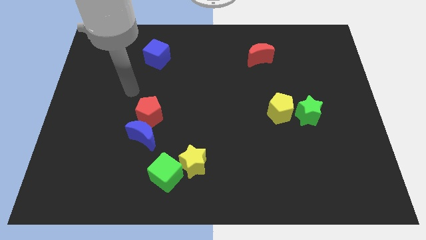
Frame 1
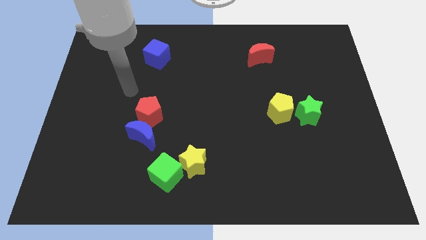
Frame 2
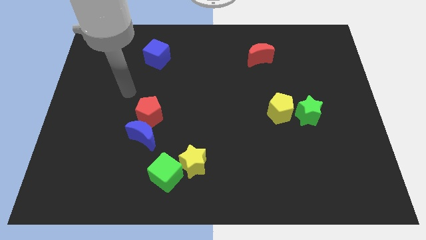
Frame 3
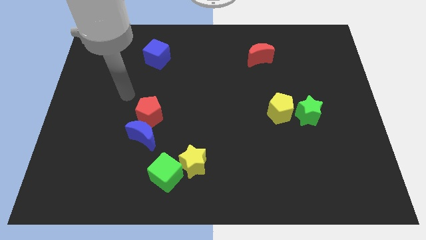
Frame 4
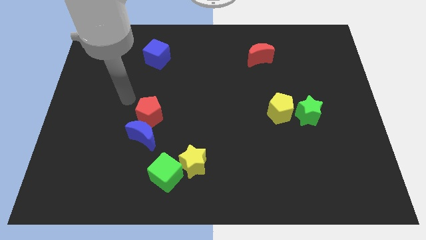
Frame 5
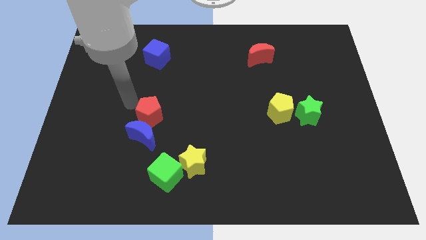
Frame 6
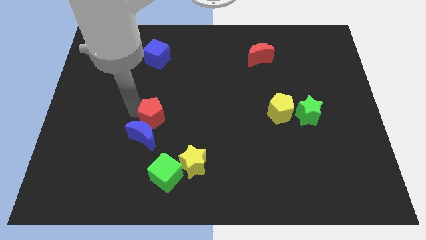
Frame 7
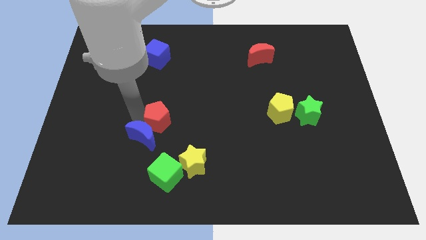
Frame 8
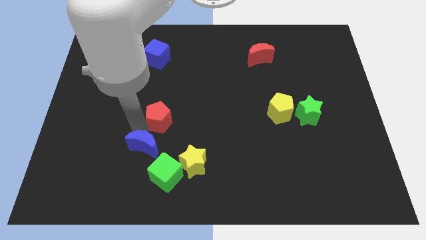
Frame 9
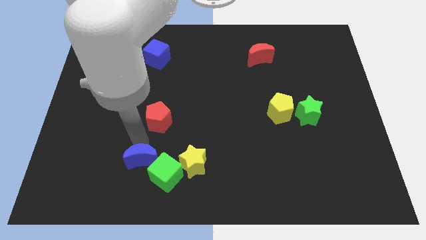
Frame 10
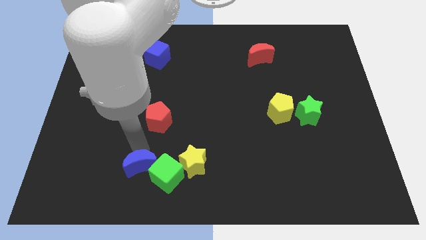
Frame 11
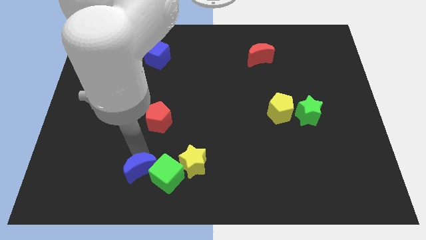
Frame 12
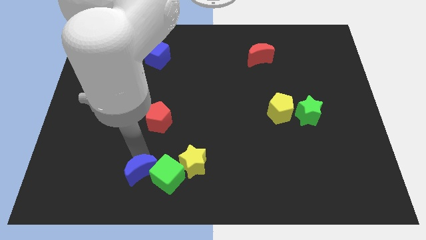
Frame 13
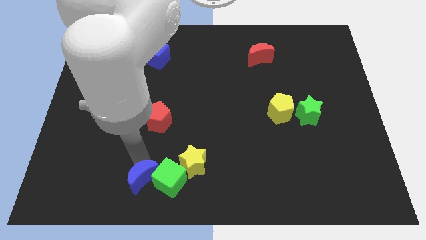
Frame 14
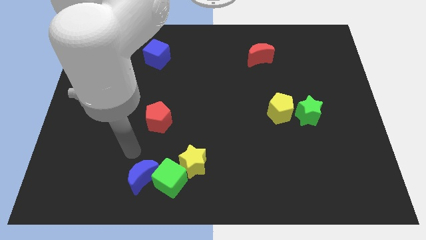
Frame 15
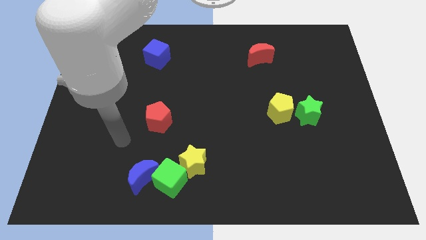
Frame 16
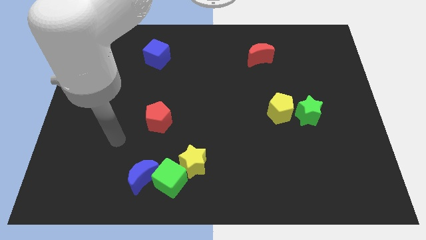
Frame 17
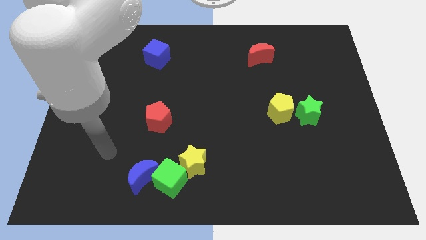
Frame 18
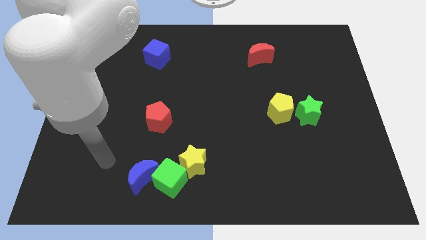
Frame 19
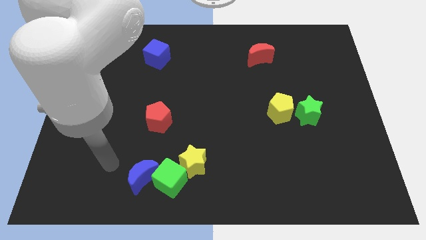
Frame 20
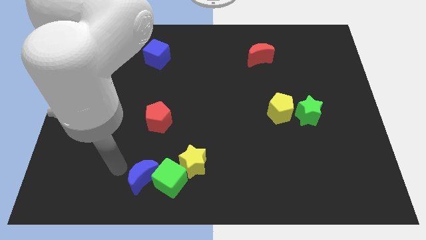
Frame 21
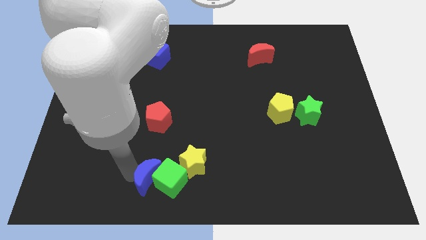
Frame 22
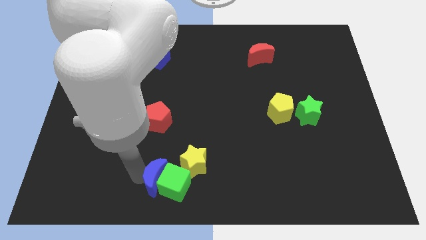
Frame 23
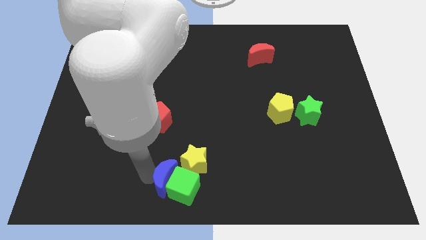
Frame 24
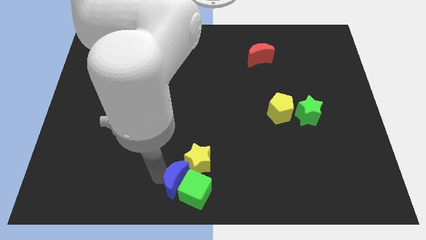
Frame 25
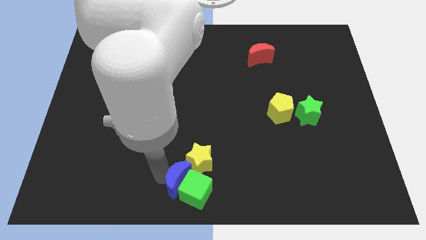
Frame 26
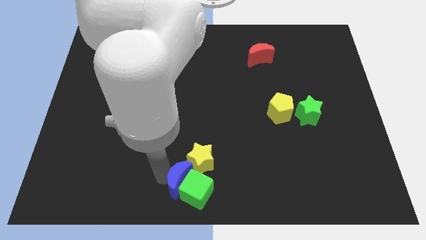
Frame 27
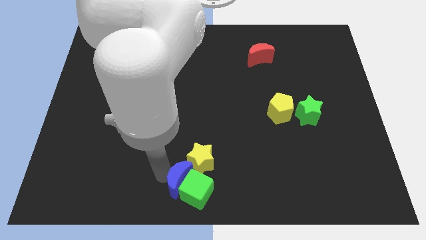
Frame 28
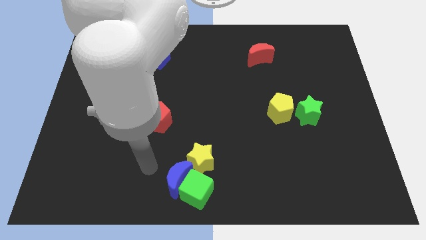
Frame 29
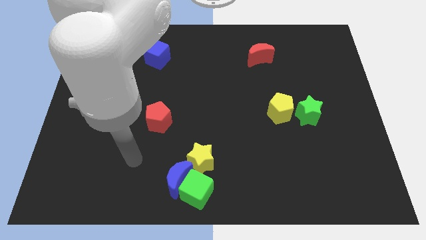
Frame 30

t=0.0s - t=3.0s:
move the blue crescent into the green cube

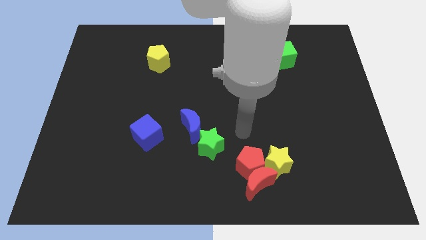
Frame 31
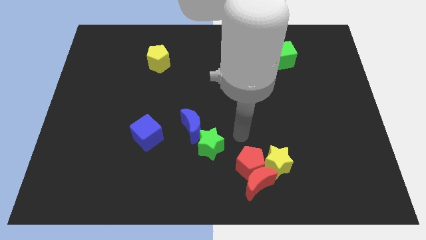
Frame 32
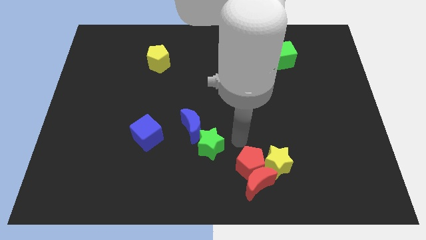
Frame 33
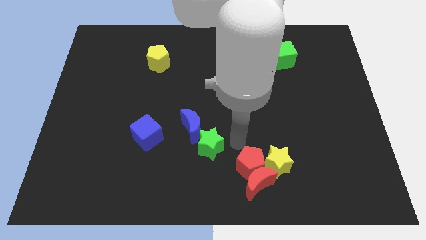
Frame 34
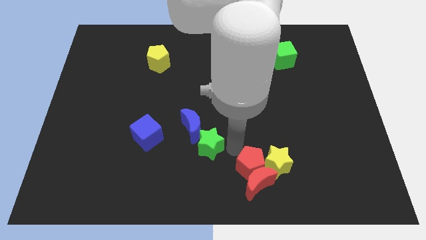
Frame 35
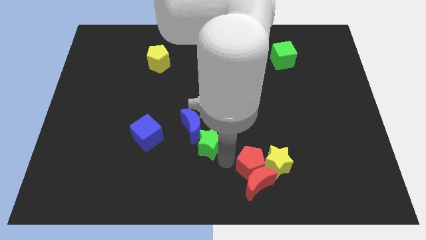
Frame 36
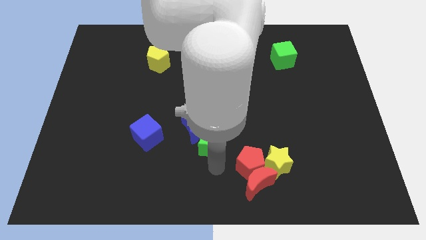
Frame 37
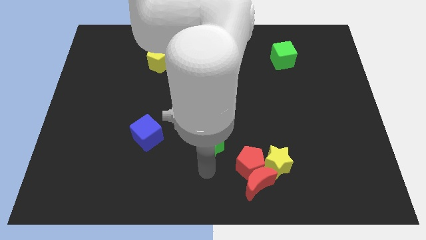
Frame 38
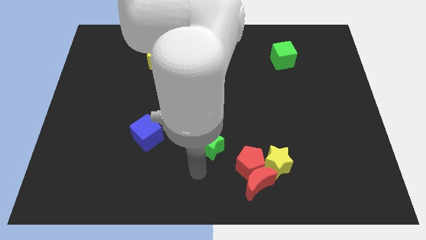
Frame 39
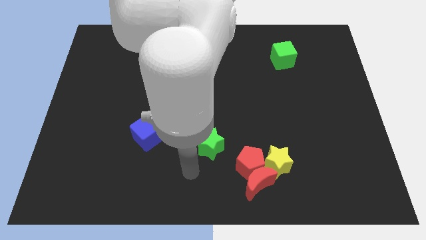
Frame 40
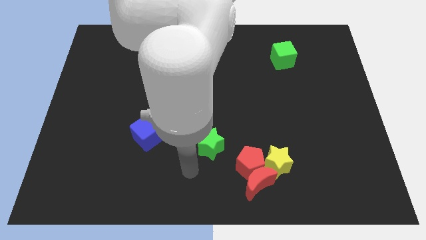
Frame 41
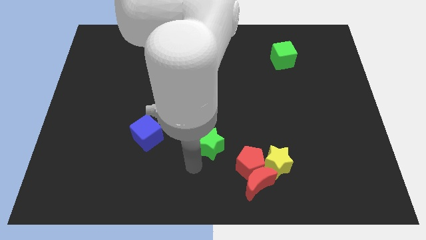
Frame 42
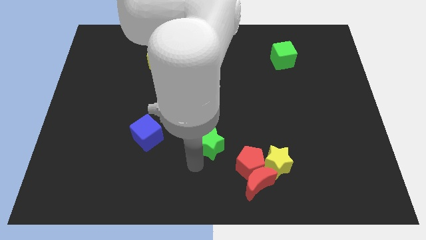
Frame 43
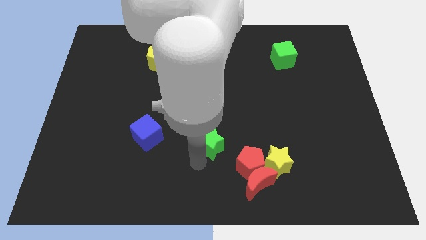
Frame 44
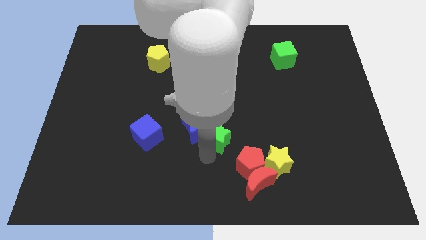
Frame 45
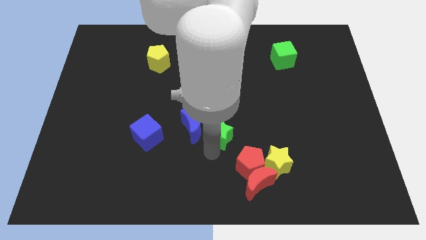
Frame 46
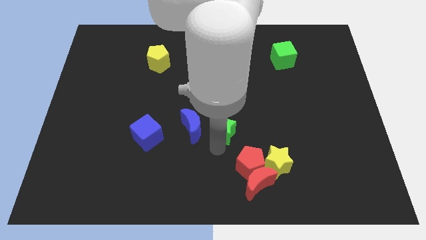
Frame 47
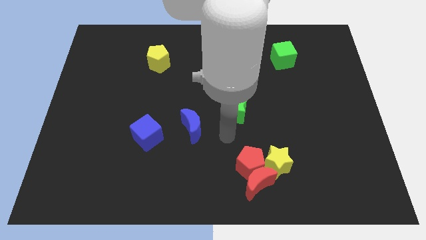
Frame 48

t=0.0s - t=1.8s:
move the green star to the right side of the blue crescent

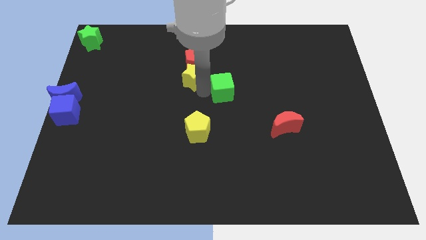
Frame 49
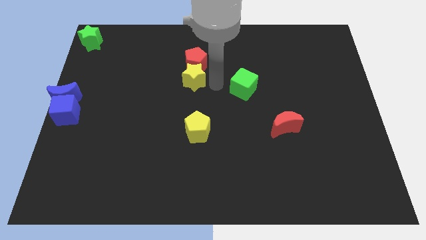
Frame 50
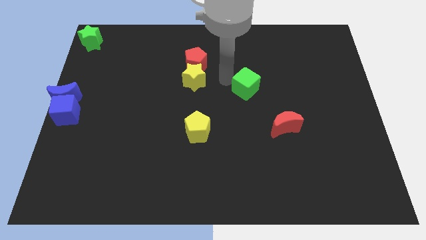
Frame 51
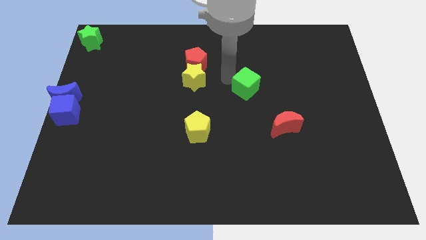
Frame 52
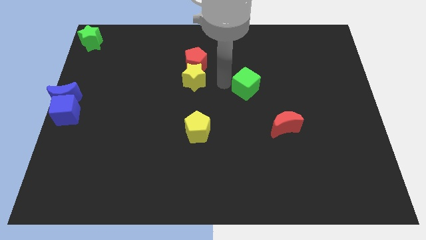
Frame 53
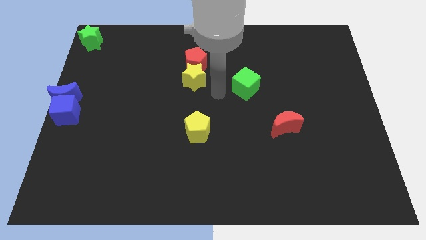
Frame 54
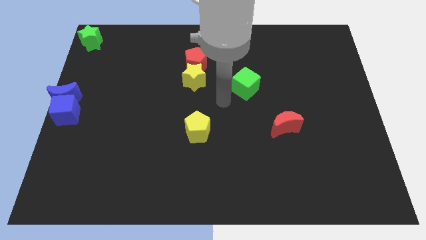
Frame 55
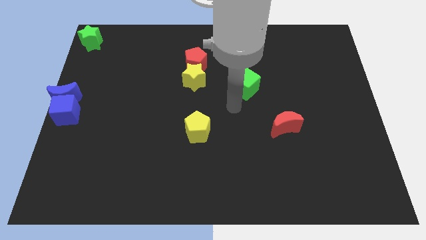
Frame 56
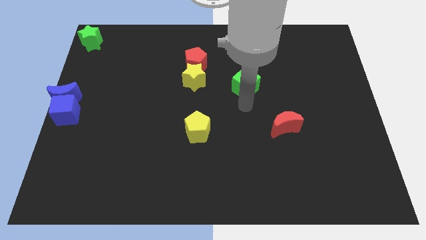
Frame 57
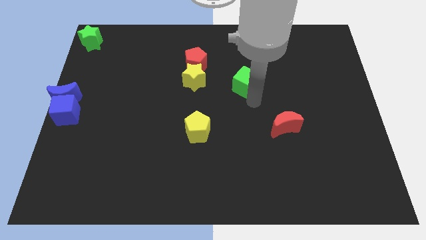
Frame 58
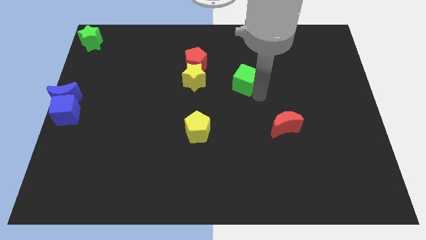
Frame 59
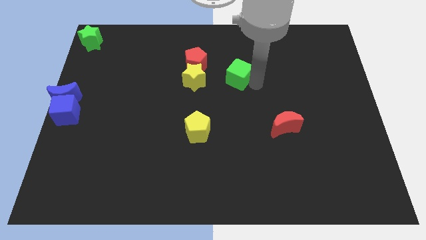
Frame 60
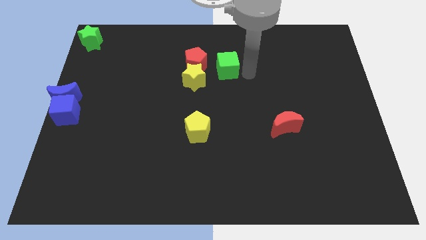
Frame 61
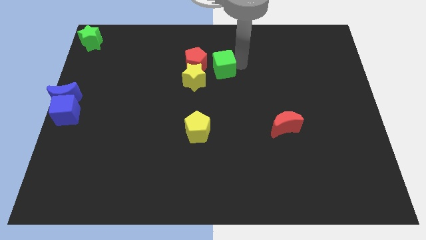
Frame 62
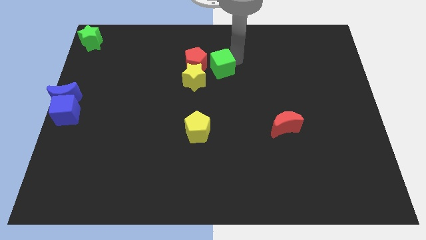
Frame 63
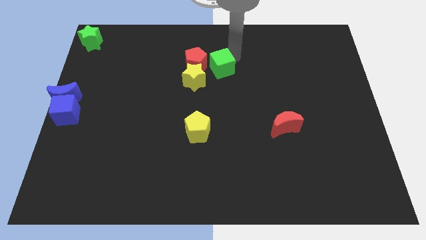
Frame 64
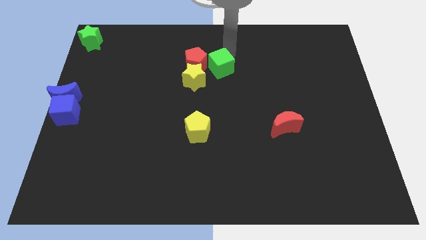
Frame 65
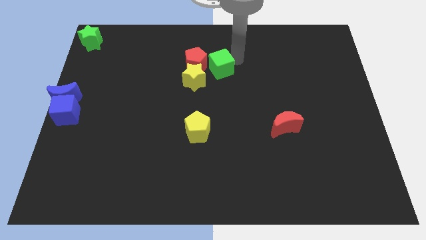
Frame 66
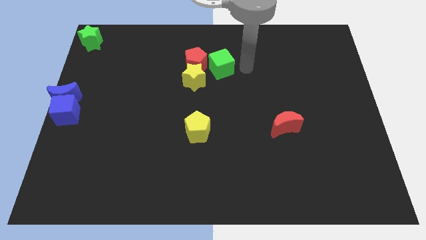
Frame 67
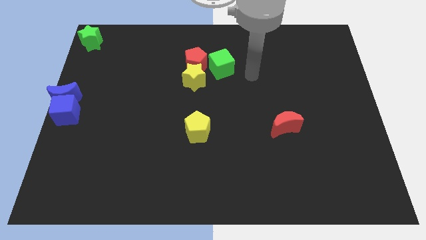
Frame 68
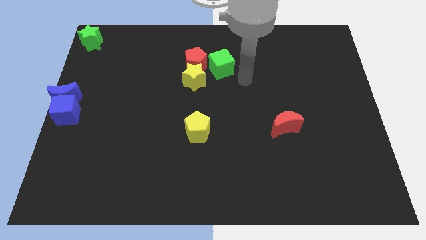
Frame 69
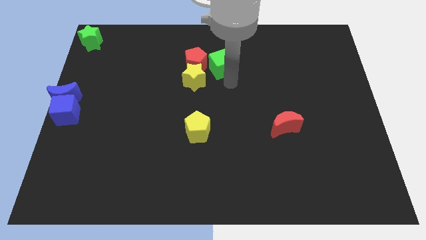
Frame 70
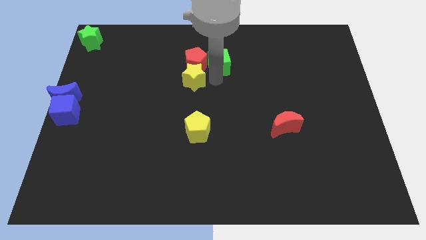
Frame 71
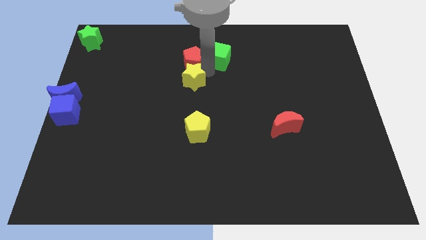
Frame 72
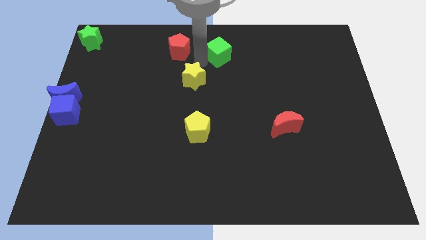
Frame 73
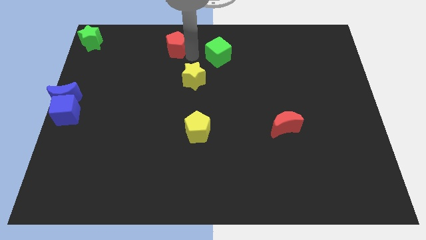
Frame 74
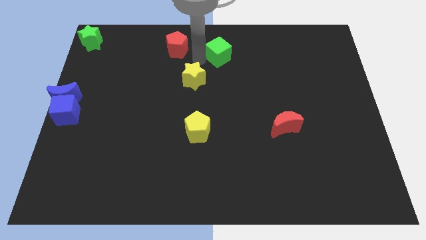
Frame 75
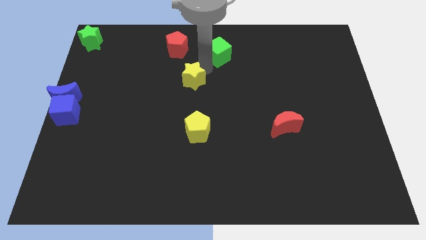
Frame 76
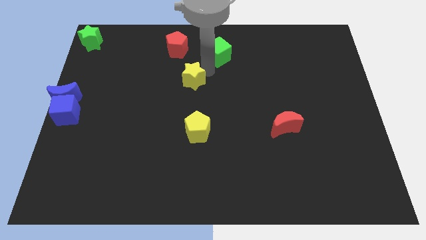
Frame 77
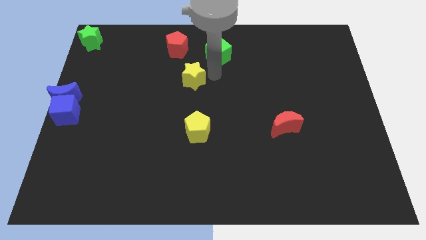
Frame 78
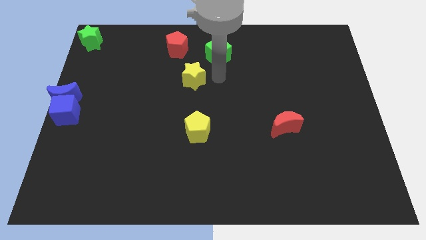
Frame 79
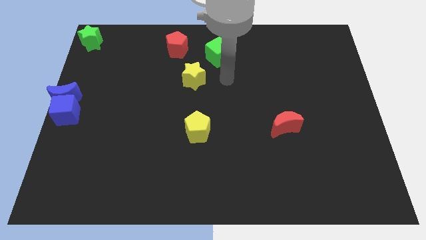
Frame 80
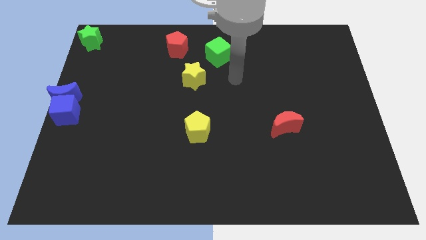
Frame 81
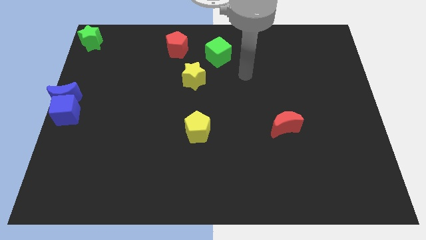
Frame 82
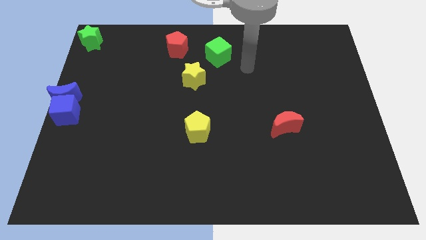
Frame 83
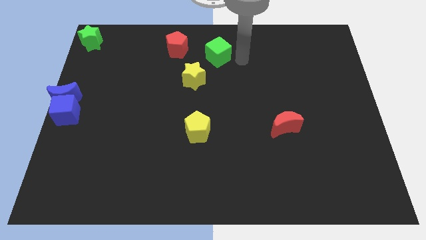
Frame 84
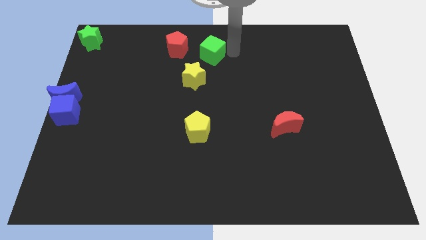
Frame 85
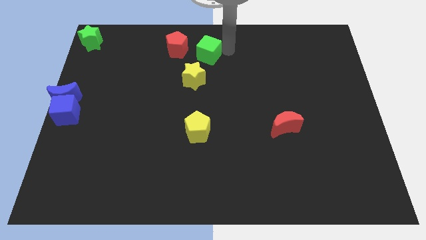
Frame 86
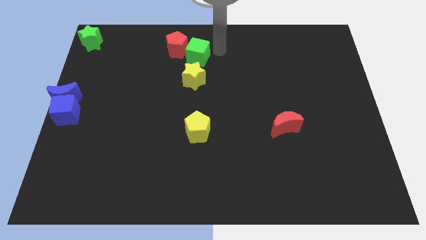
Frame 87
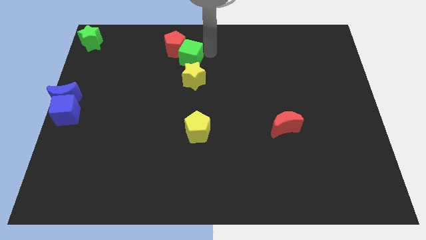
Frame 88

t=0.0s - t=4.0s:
push the green cube to the right of the red pentagon

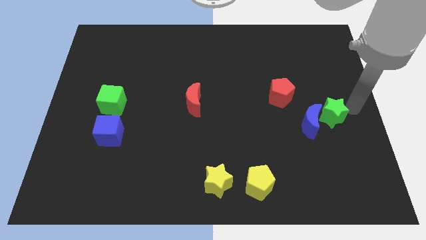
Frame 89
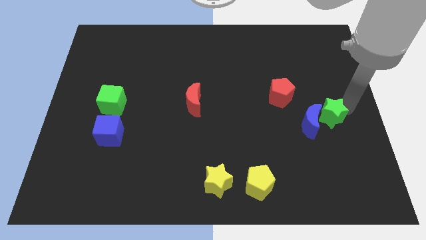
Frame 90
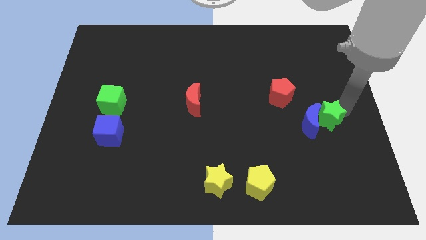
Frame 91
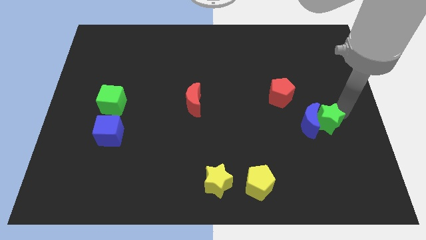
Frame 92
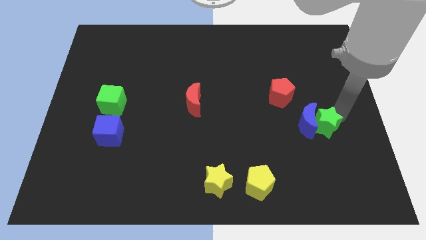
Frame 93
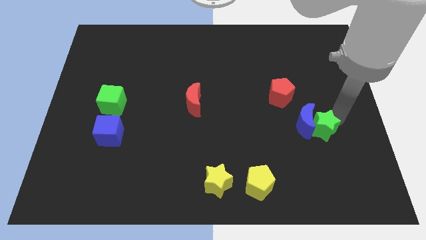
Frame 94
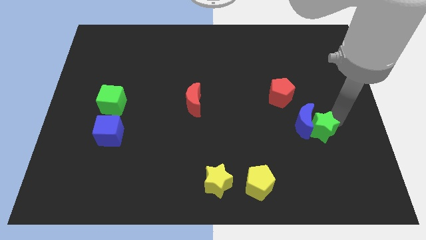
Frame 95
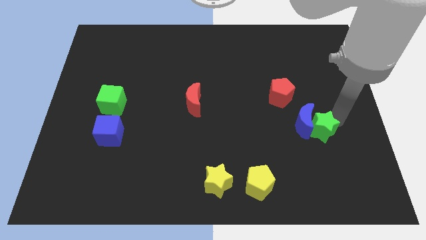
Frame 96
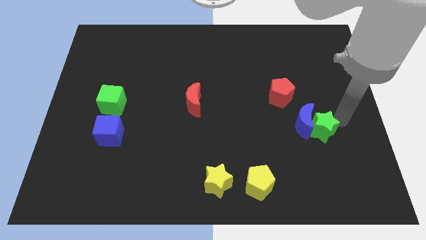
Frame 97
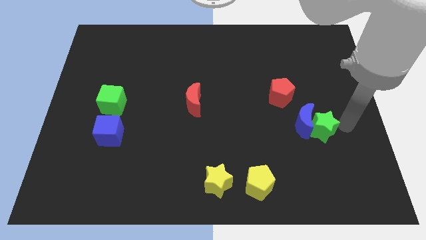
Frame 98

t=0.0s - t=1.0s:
push the green star into the blue crescent
